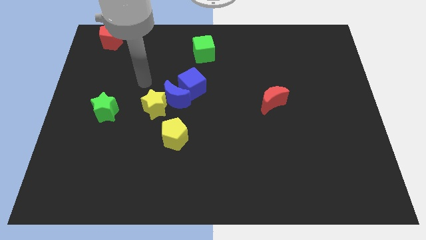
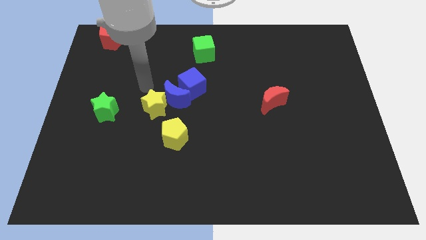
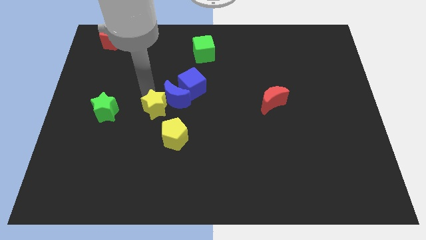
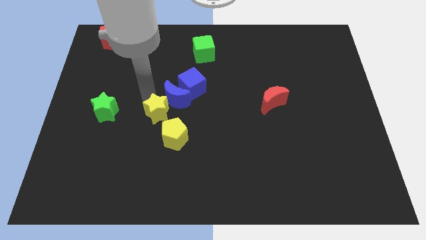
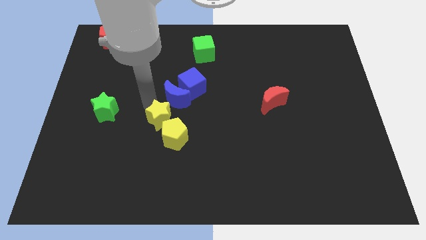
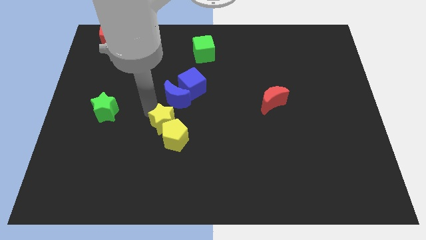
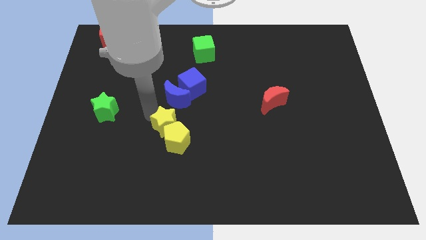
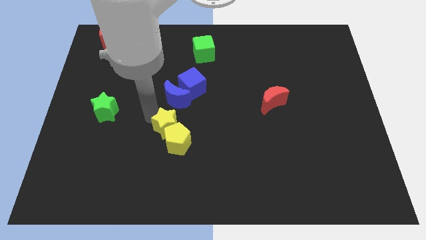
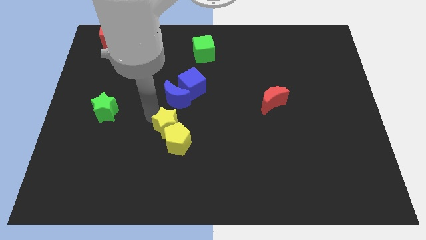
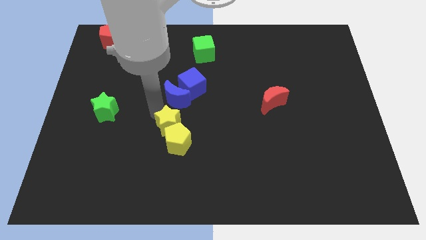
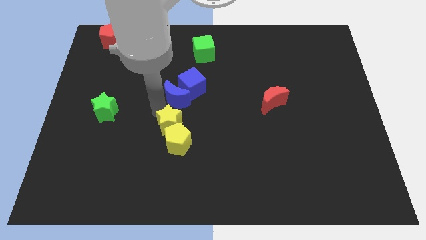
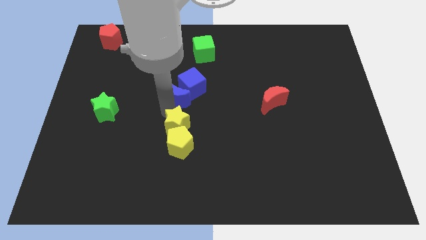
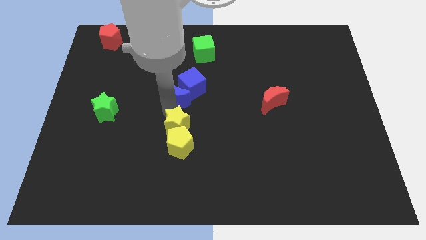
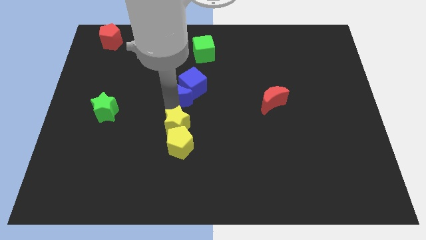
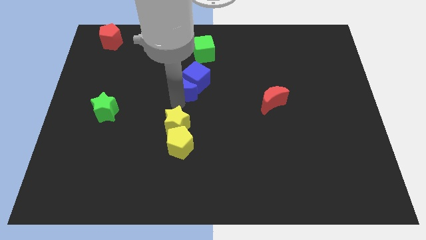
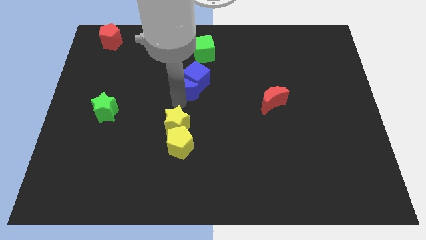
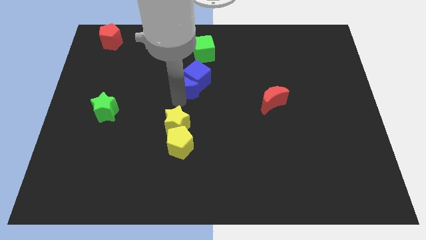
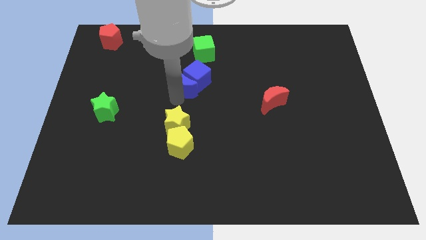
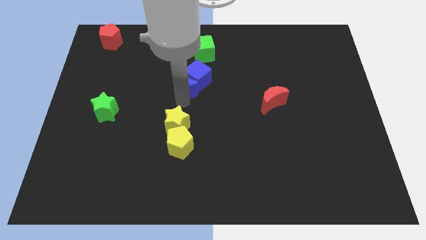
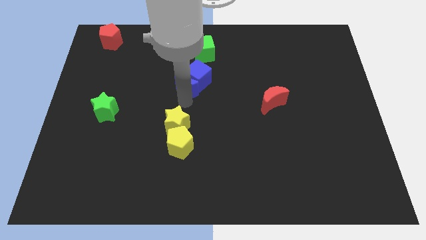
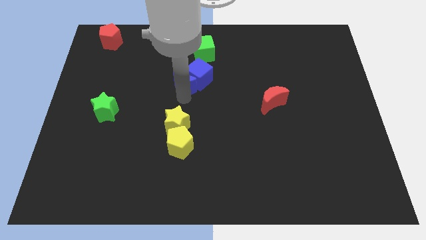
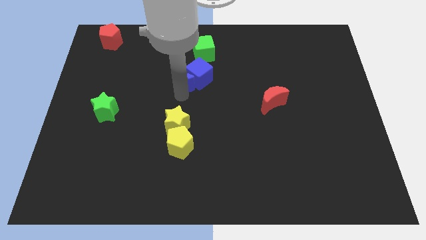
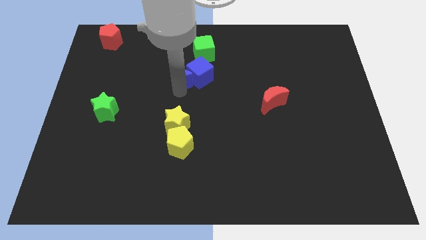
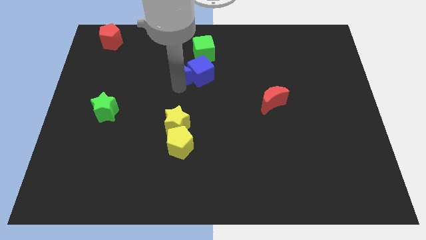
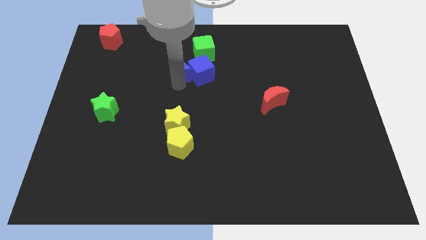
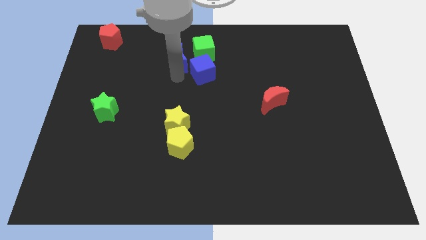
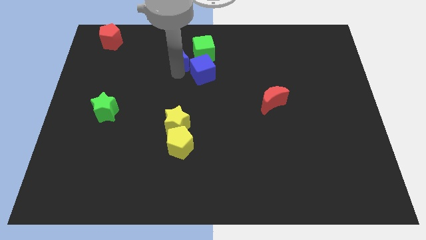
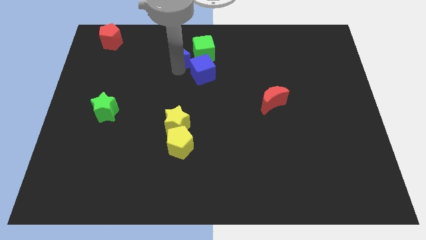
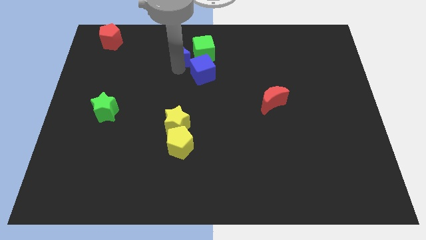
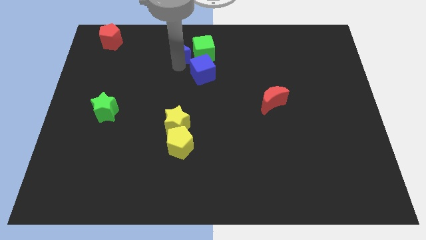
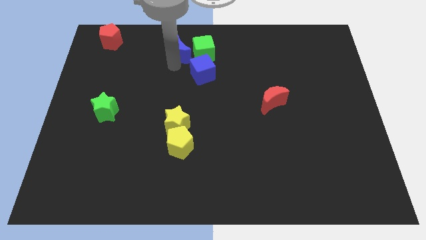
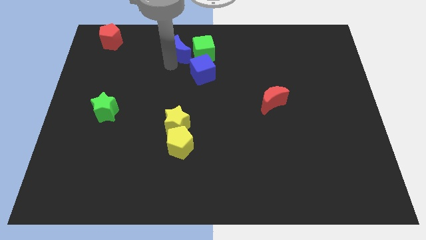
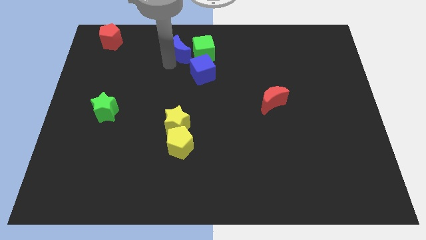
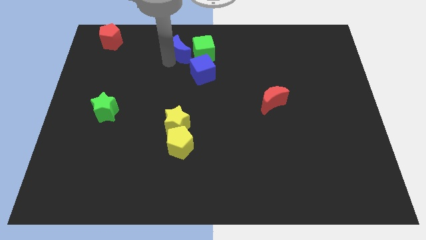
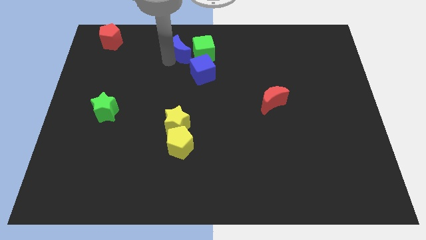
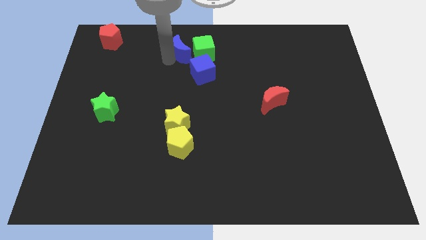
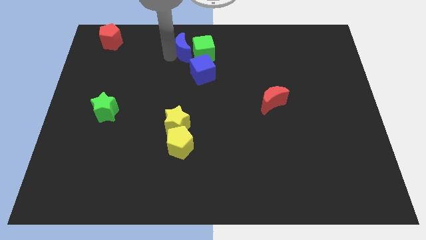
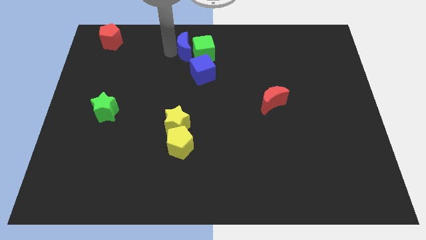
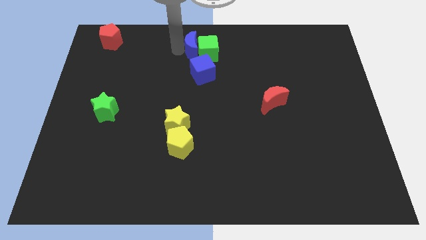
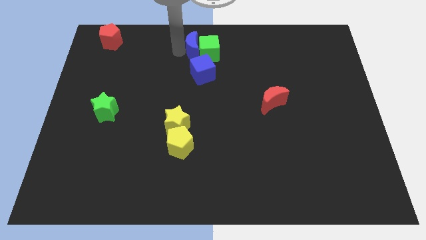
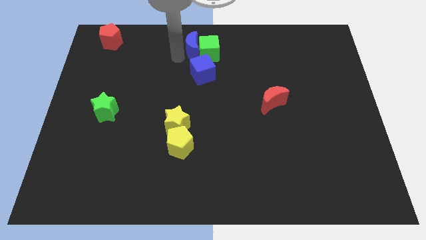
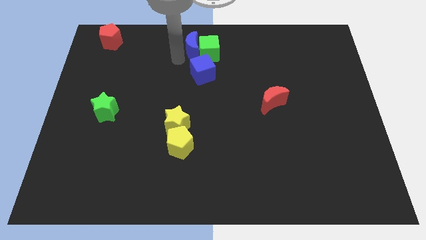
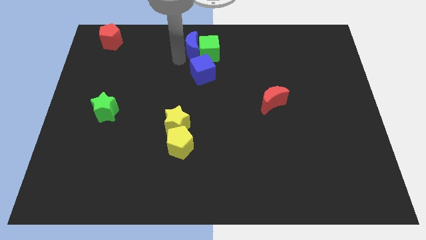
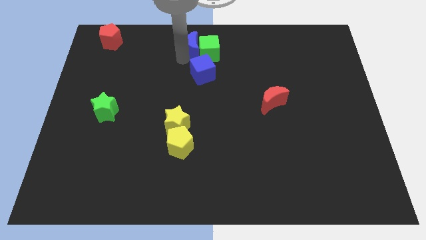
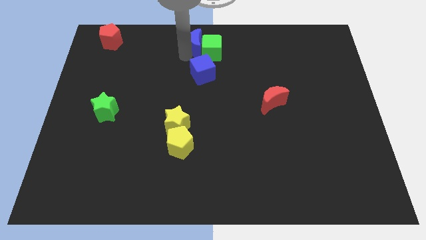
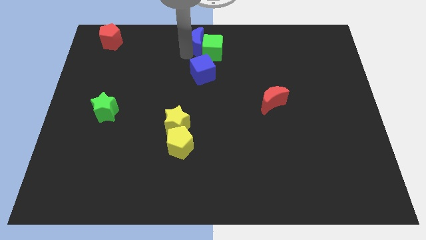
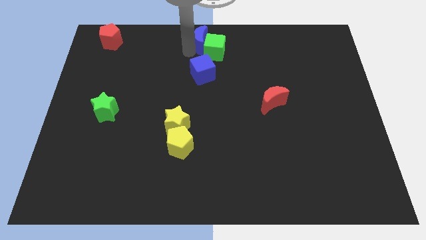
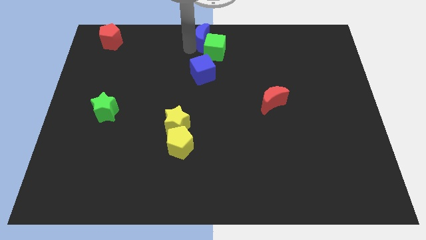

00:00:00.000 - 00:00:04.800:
move the blue moon left beside the green cube

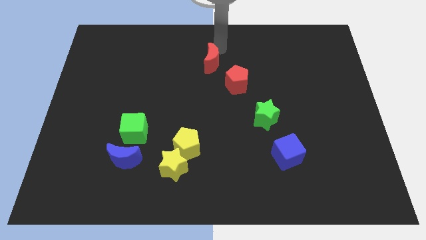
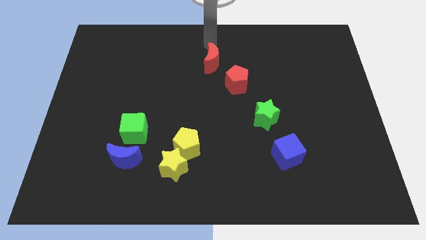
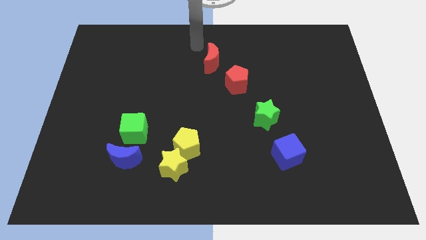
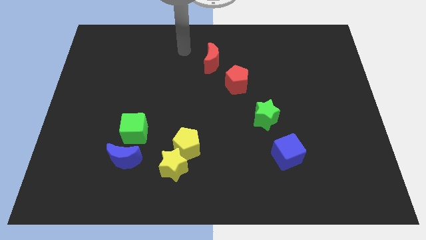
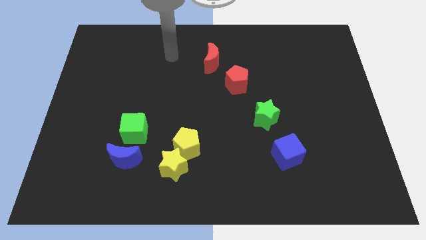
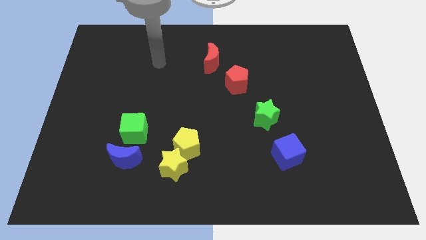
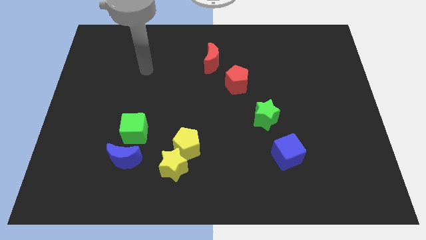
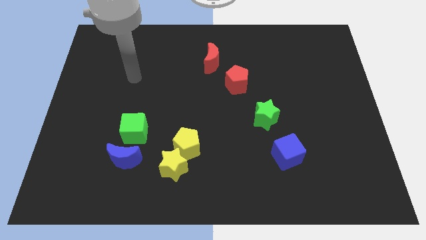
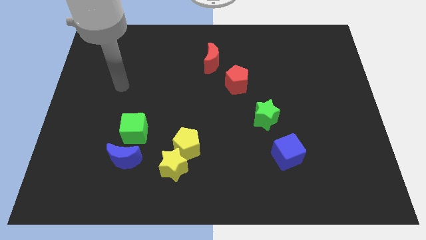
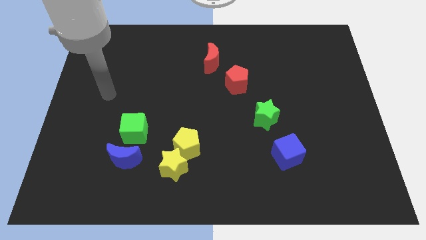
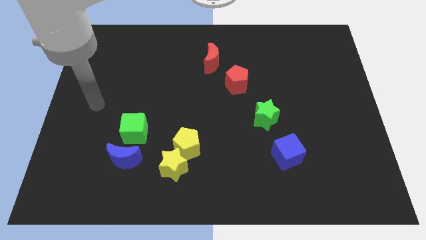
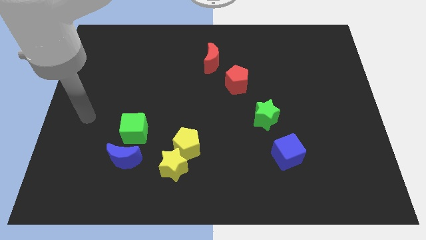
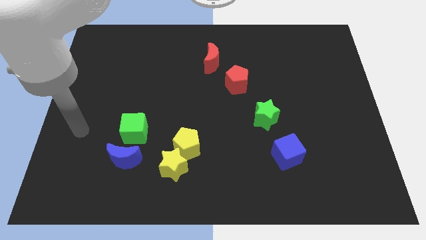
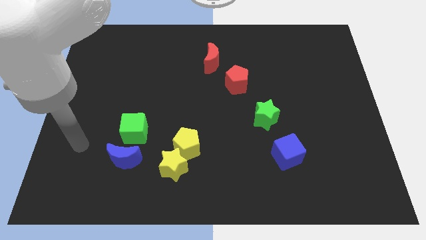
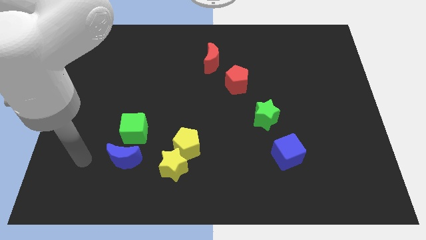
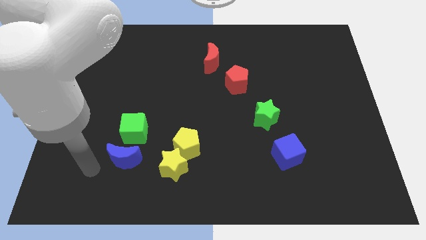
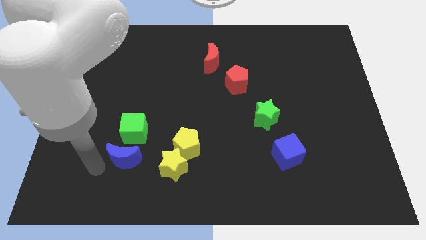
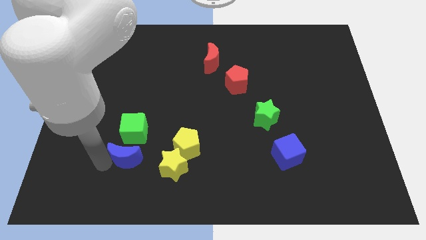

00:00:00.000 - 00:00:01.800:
move your arm towards the blue crescent

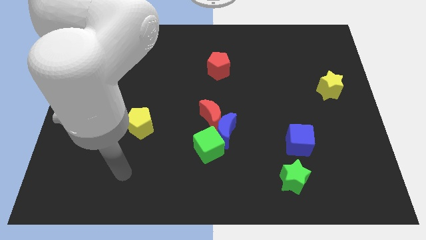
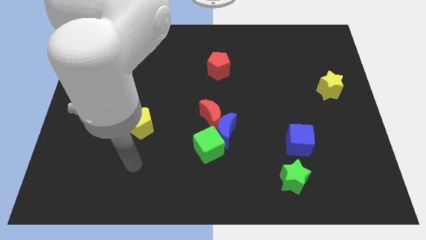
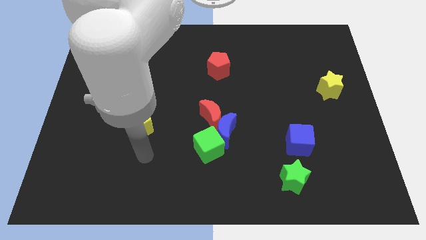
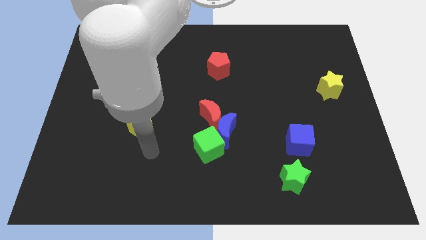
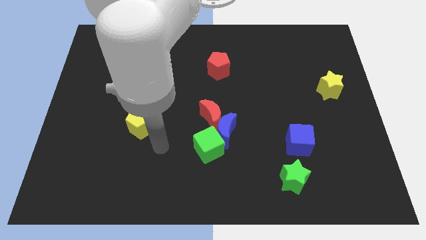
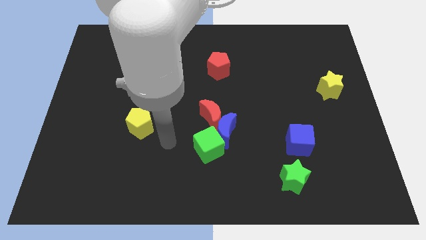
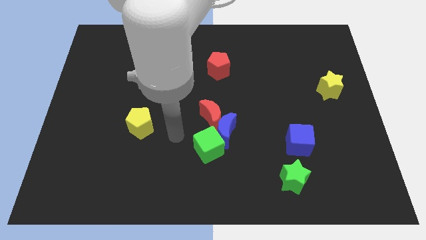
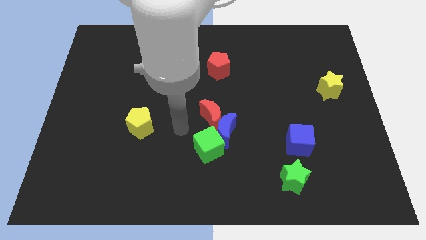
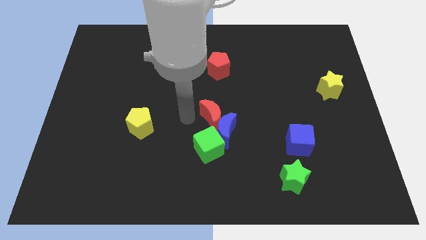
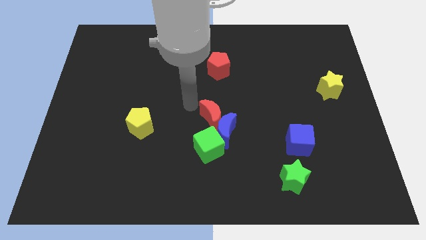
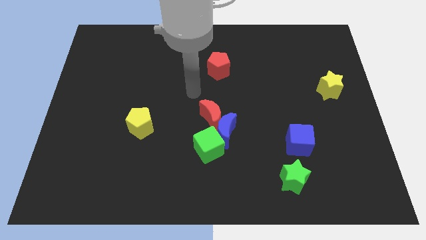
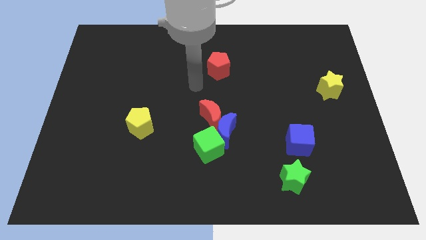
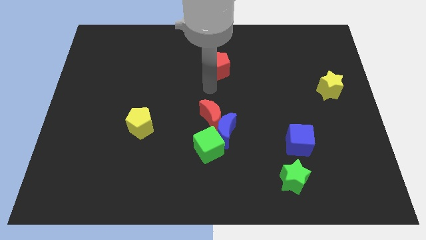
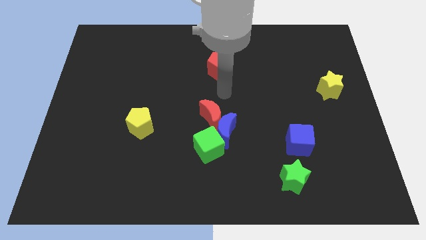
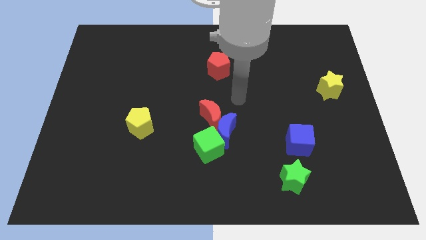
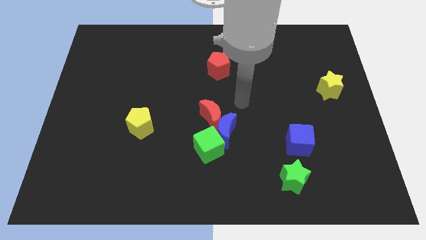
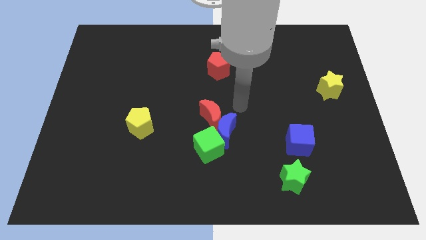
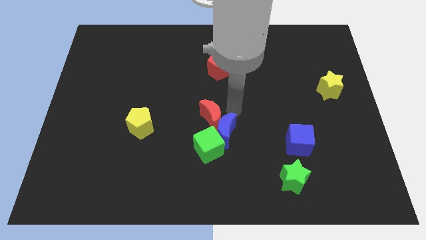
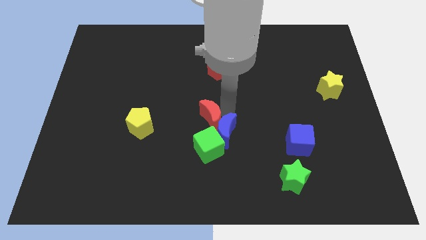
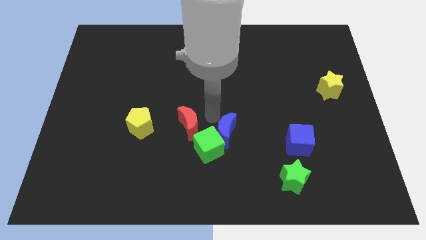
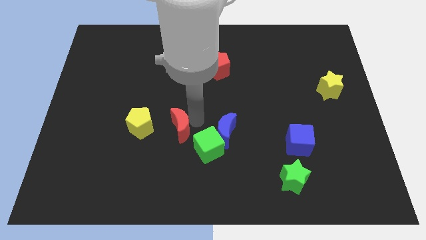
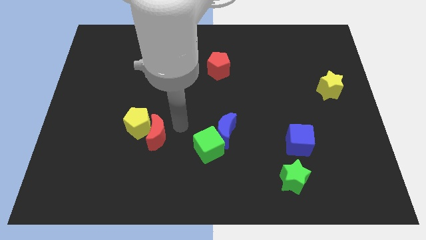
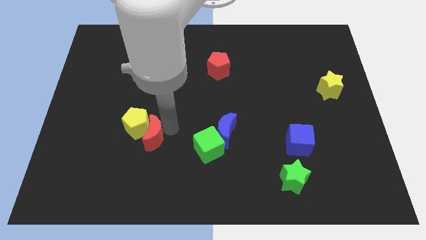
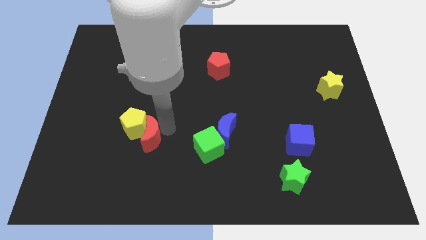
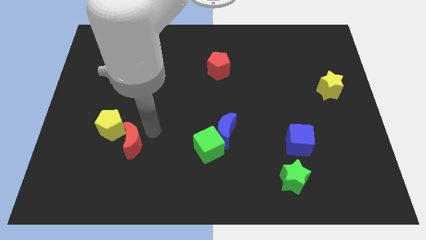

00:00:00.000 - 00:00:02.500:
push the red moon into the yellow pentagon
